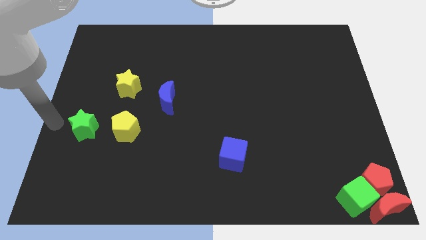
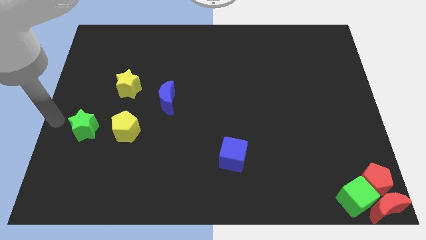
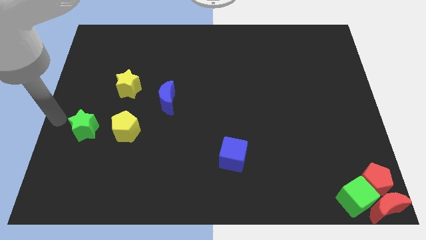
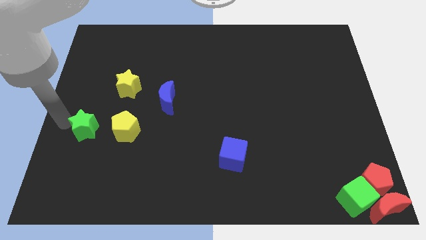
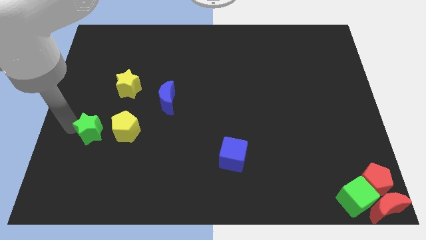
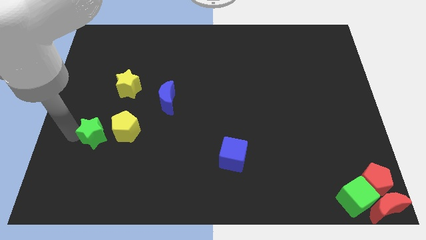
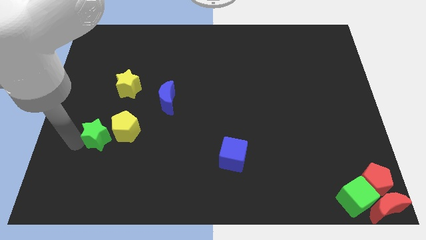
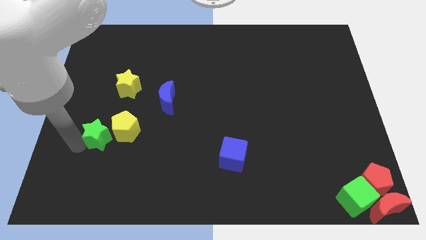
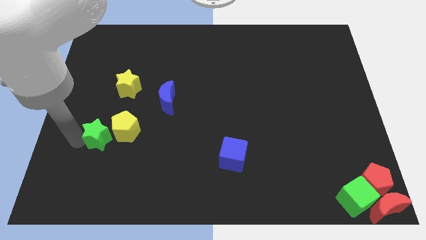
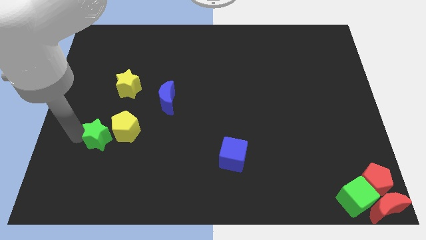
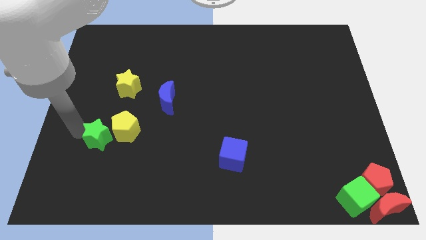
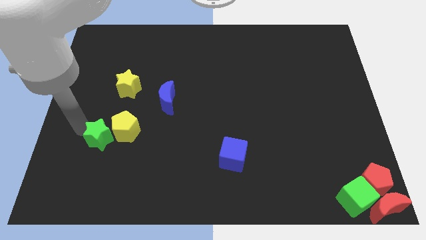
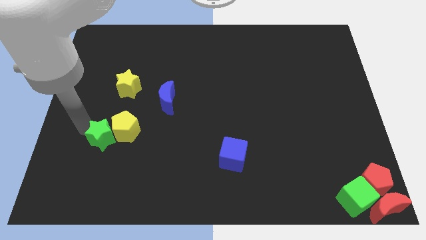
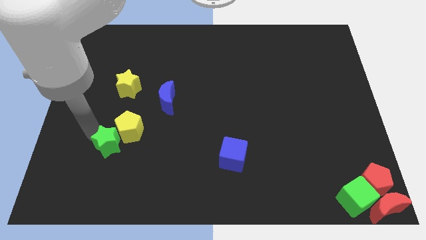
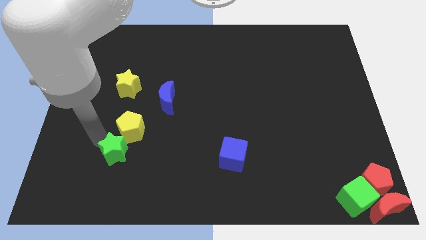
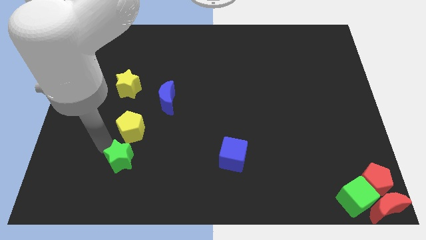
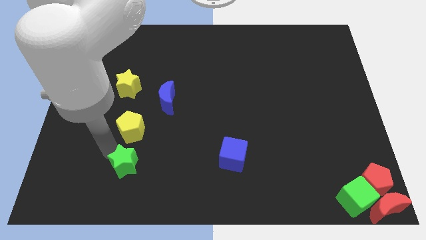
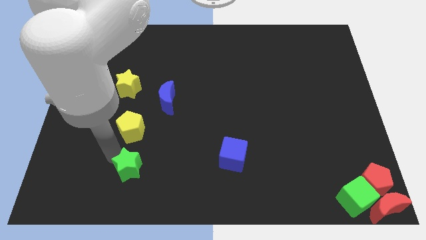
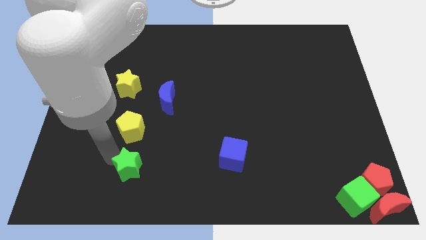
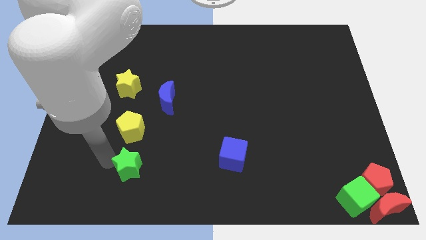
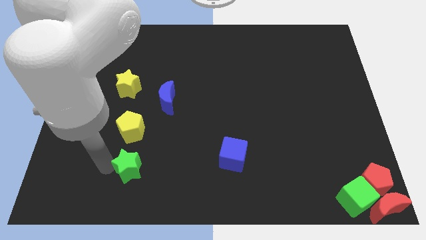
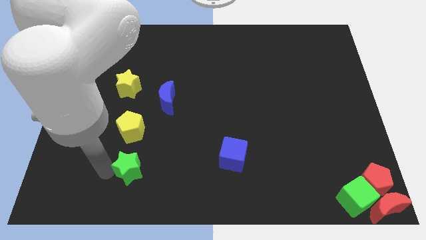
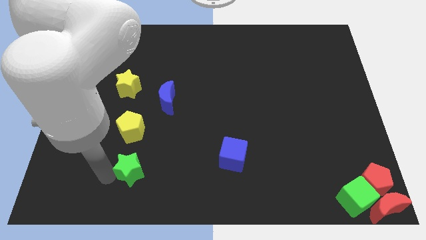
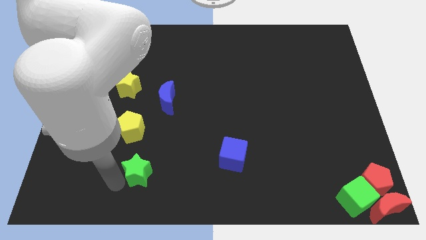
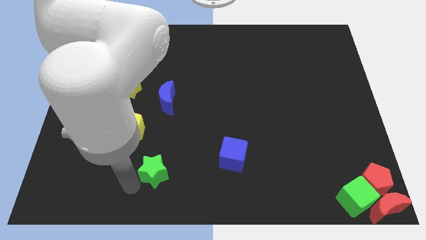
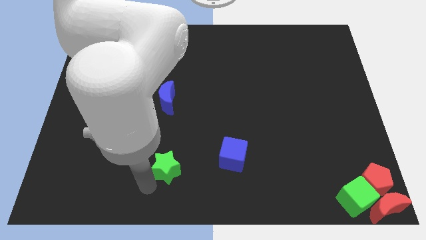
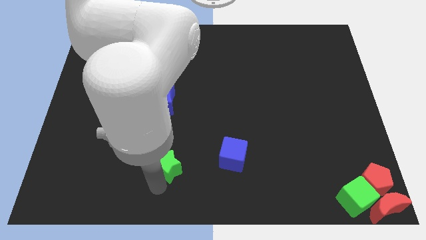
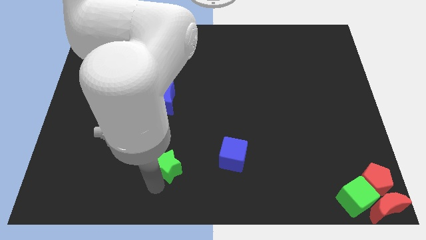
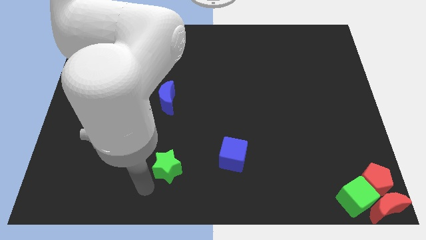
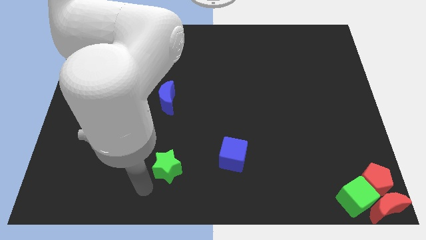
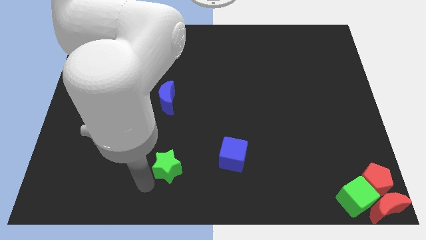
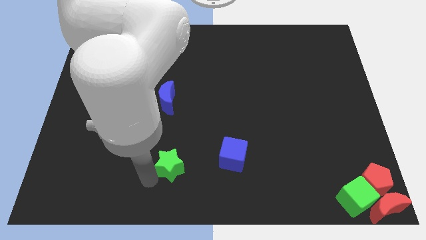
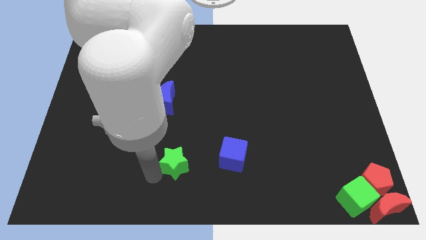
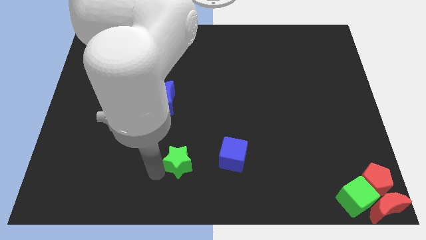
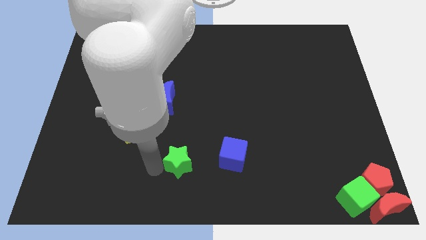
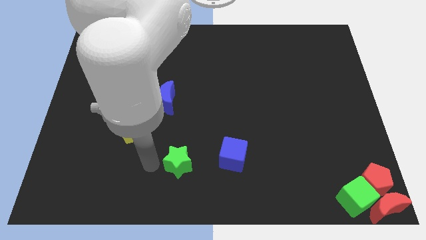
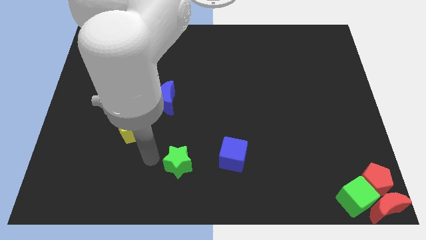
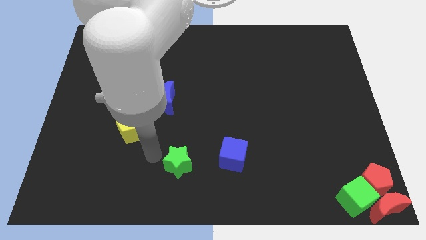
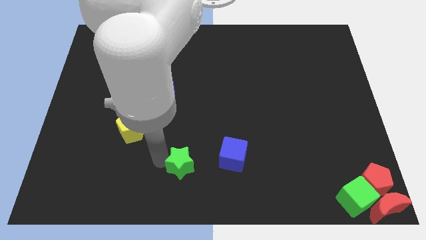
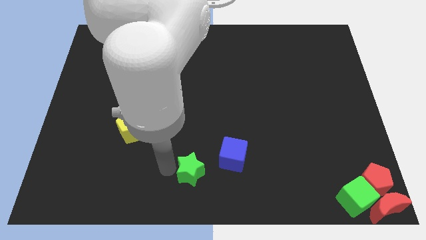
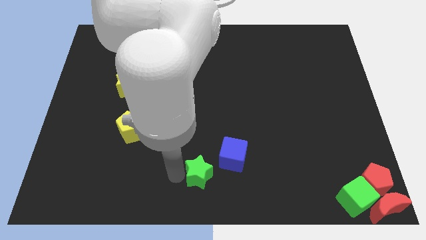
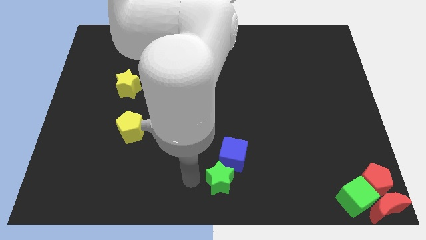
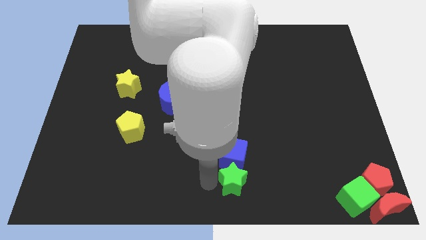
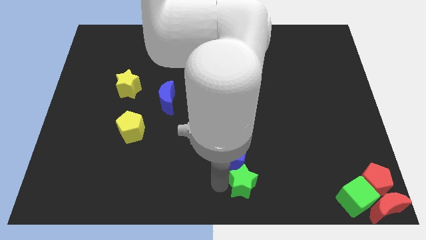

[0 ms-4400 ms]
place the green star below the blue cube

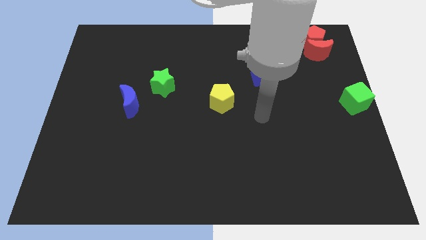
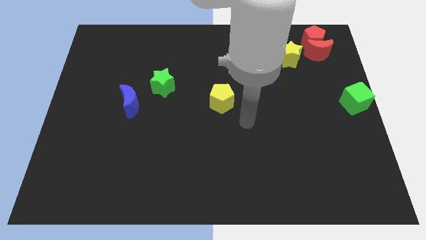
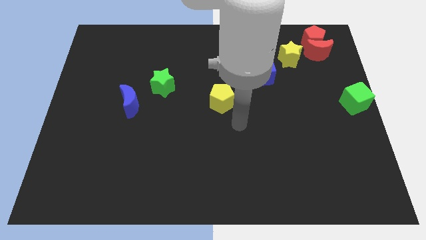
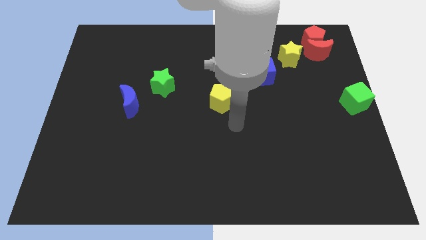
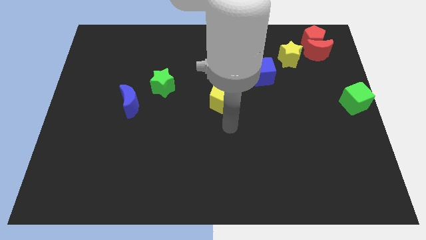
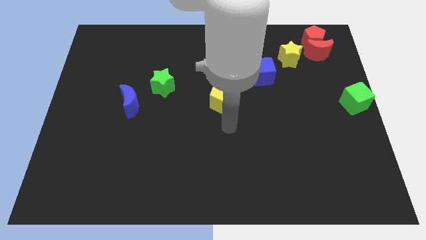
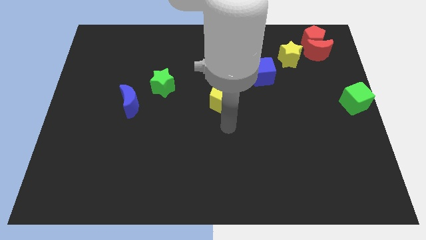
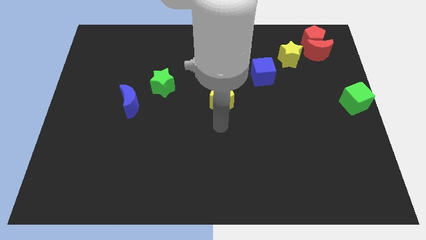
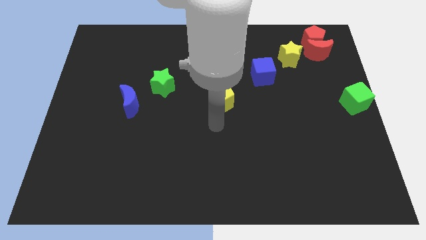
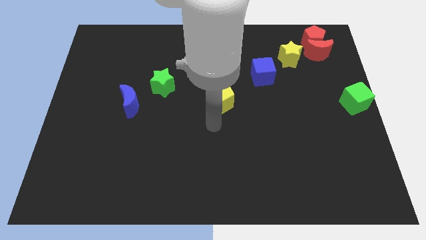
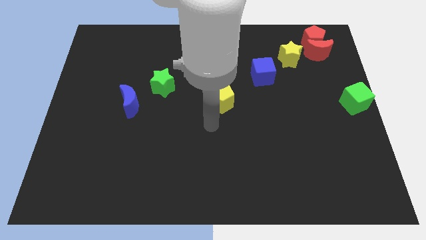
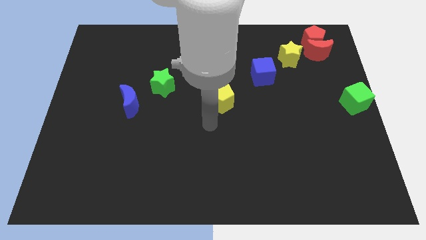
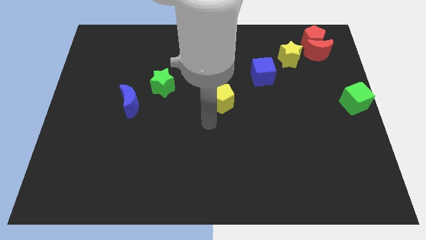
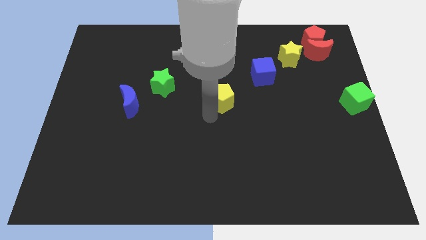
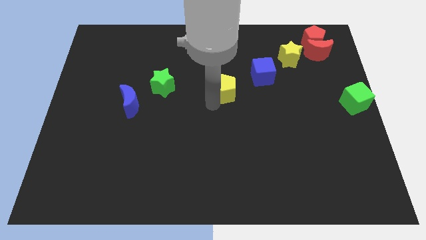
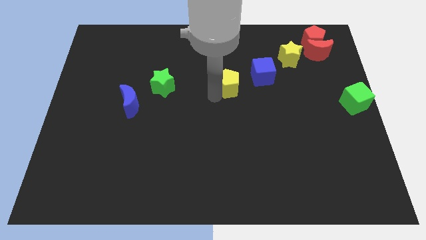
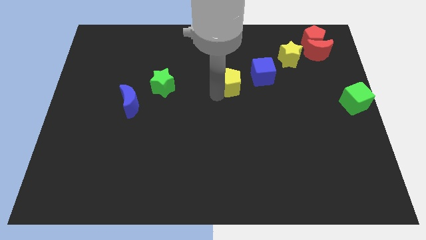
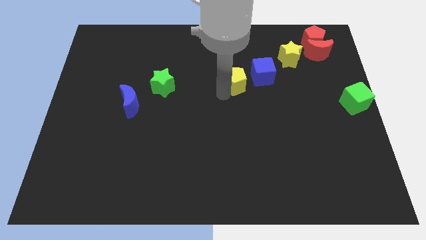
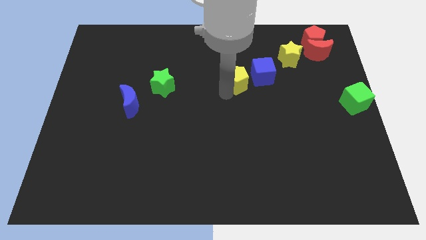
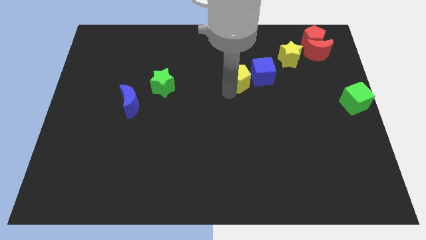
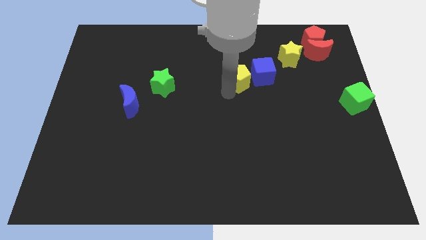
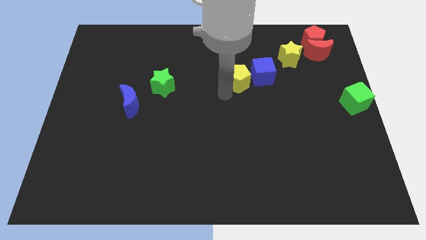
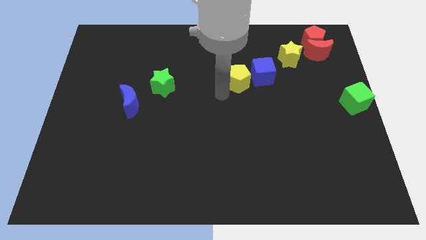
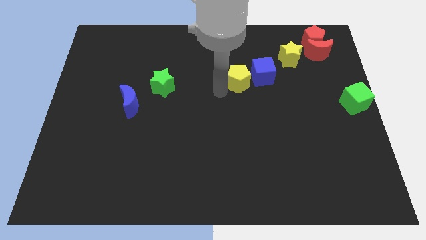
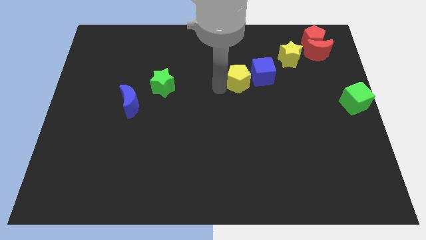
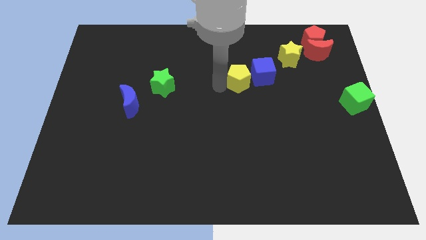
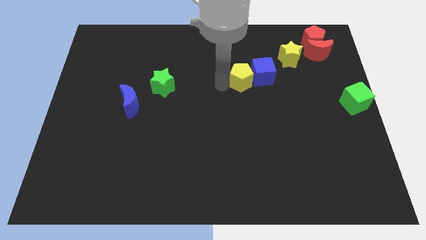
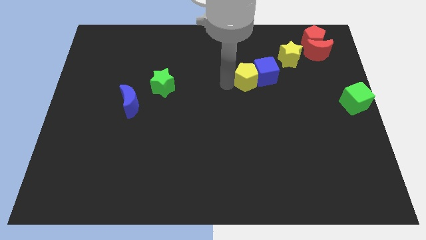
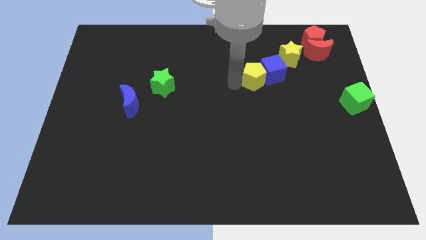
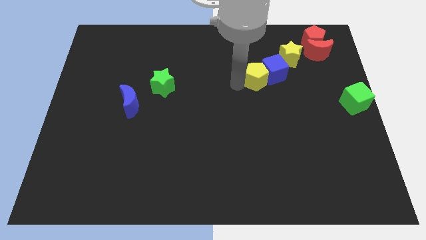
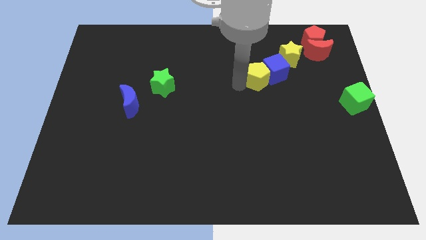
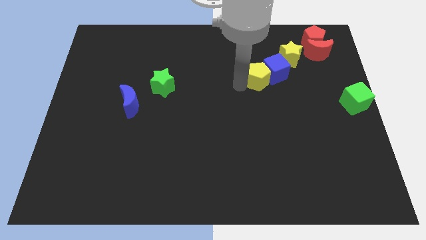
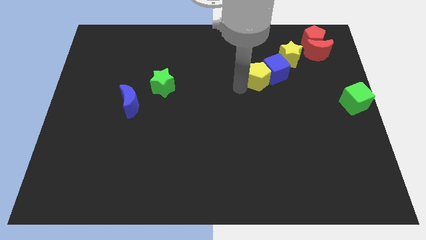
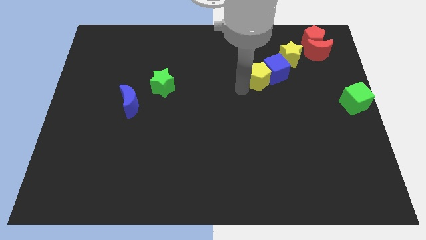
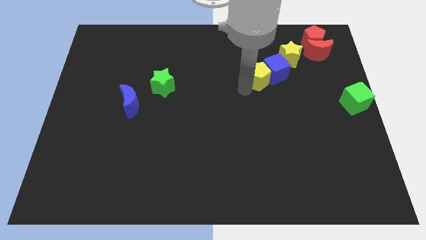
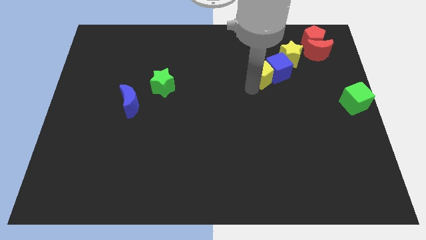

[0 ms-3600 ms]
slide the blue cube and yellow pentagon towards the yellow star

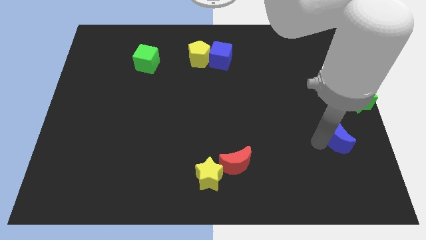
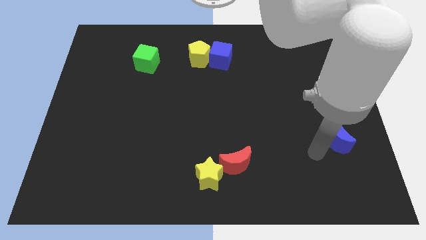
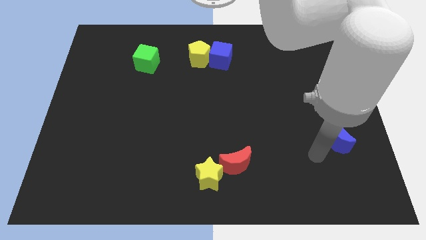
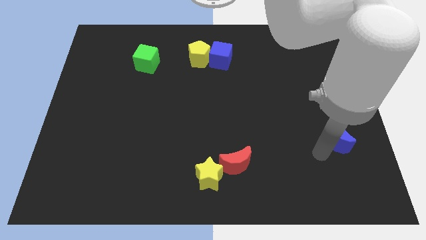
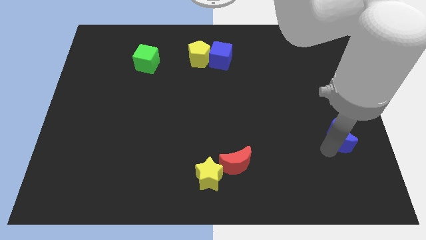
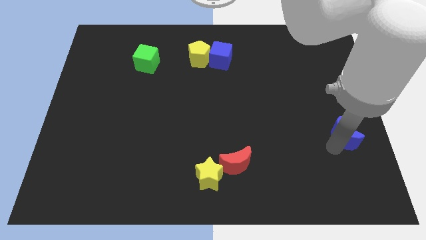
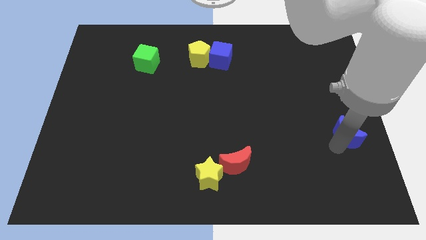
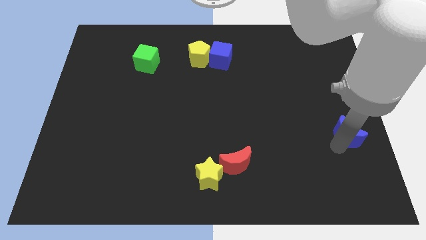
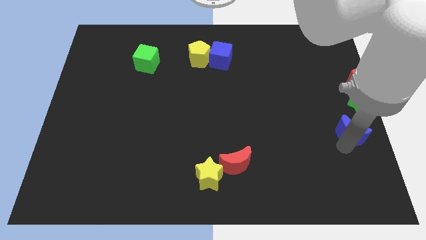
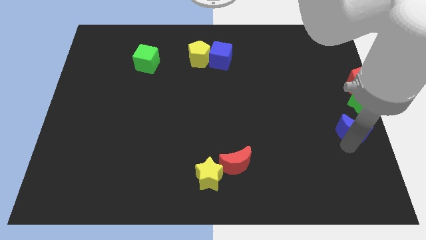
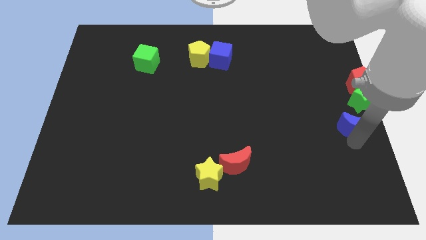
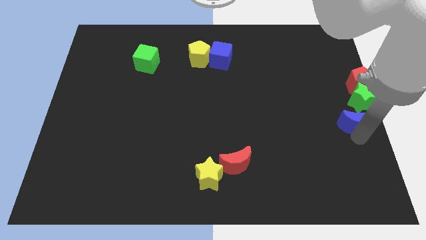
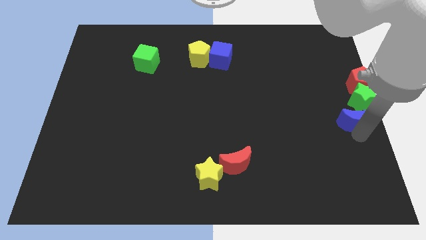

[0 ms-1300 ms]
move blue moon towards green star
